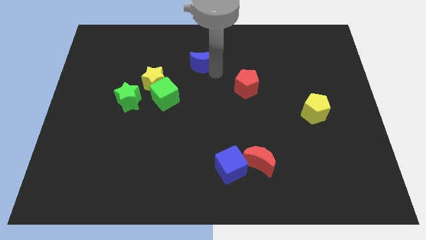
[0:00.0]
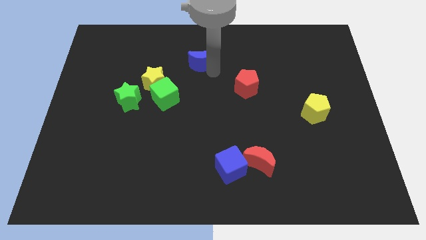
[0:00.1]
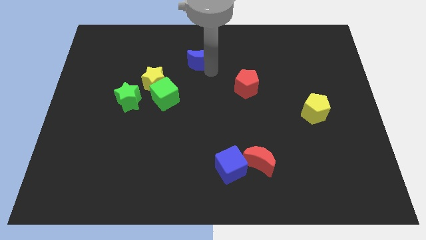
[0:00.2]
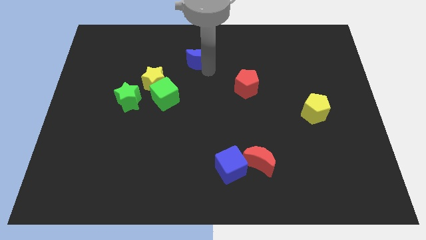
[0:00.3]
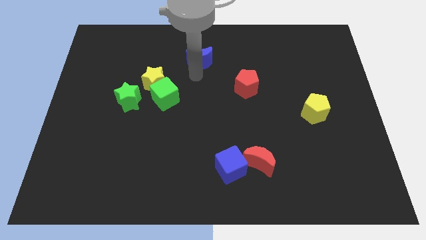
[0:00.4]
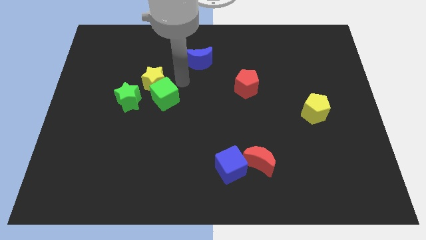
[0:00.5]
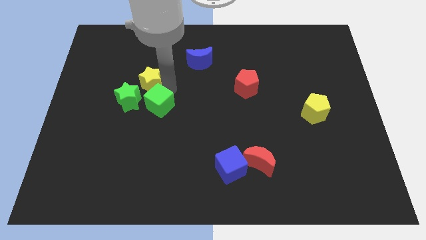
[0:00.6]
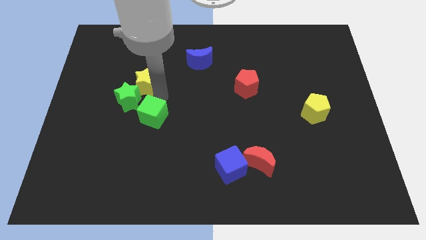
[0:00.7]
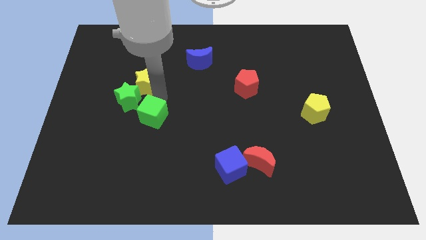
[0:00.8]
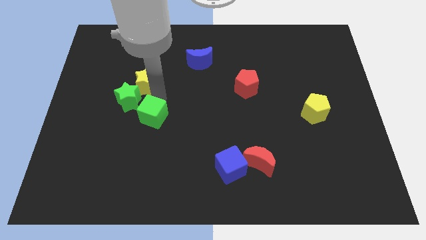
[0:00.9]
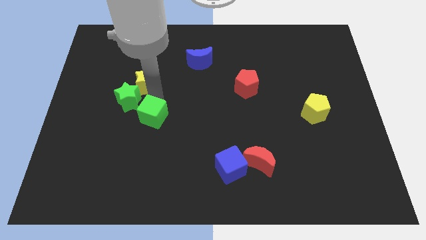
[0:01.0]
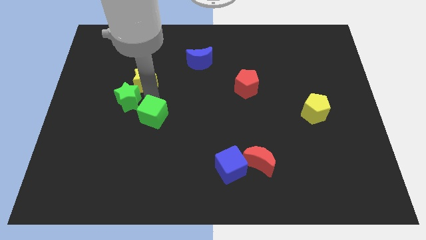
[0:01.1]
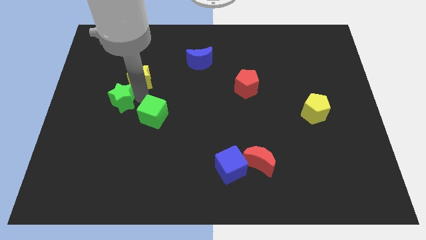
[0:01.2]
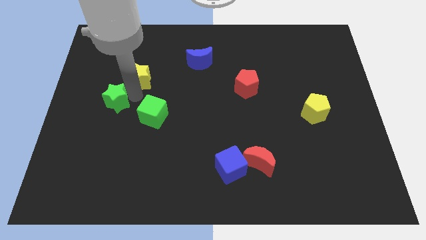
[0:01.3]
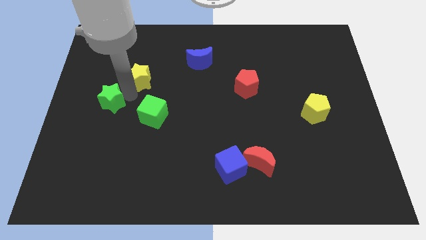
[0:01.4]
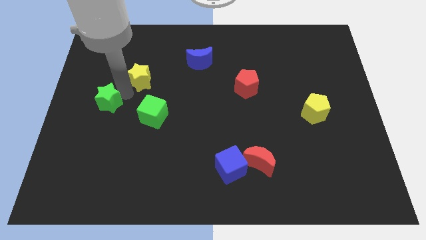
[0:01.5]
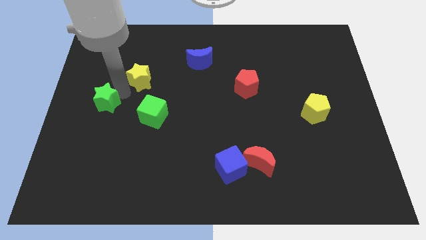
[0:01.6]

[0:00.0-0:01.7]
separate green star from yellow star

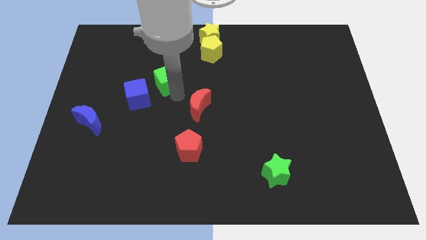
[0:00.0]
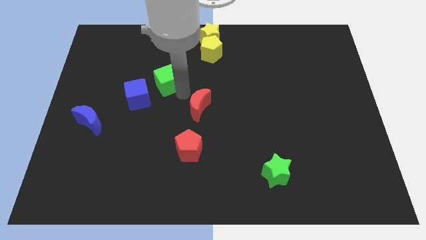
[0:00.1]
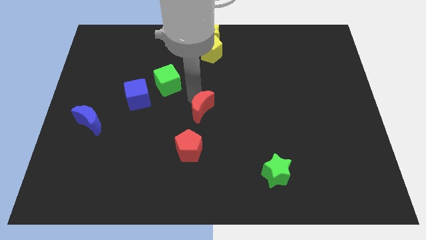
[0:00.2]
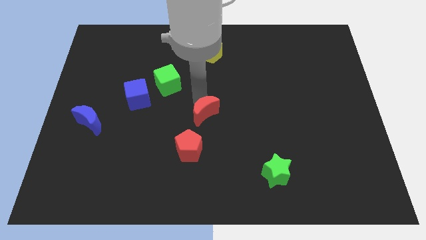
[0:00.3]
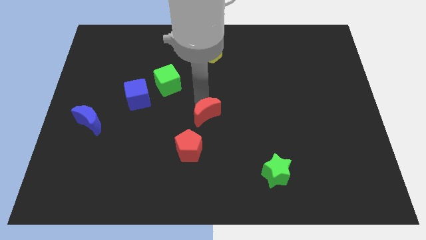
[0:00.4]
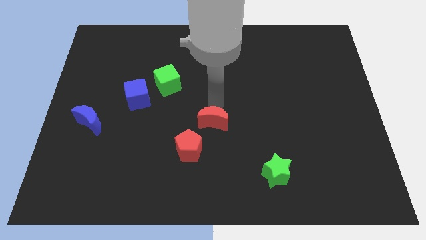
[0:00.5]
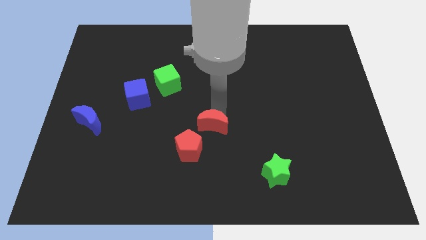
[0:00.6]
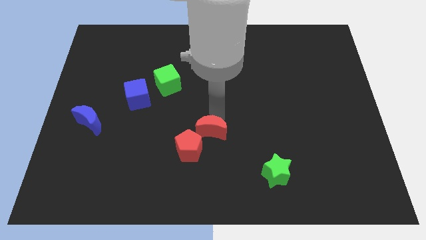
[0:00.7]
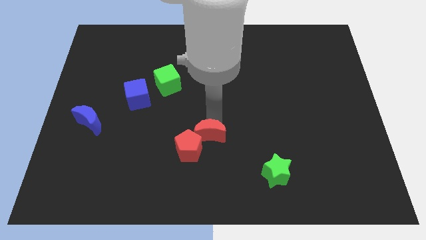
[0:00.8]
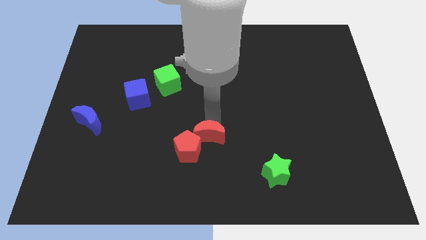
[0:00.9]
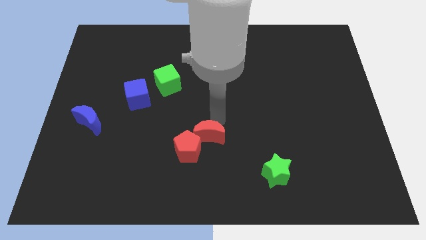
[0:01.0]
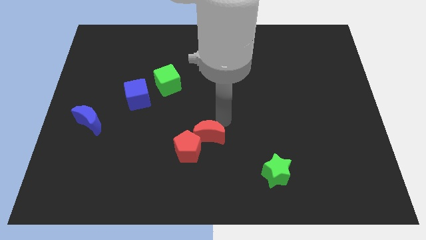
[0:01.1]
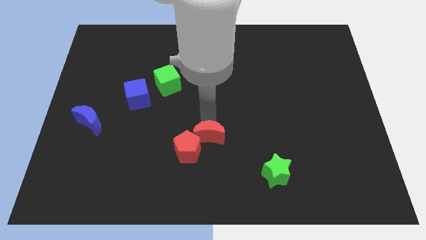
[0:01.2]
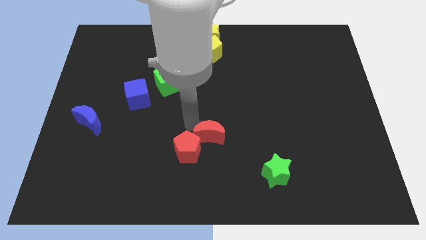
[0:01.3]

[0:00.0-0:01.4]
move the red crescent into the red pentagon

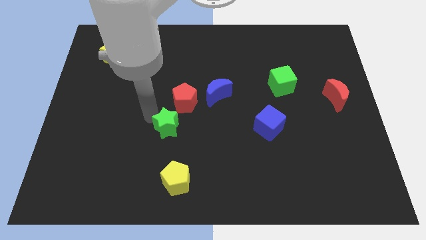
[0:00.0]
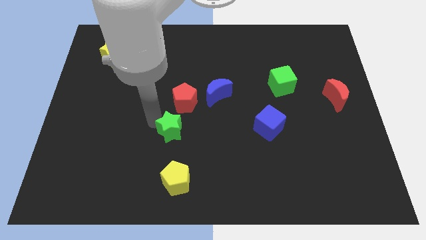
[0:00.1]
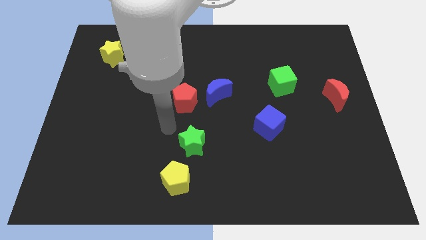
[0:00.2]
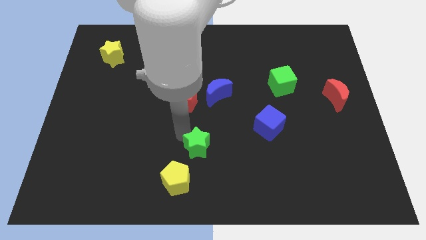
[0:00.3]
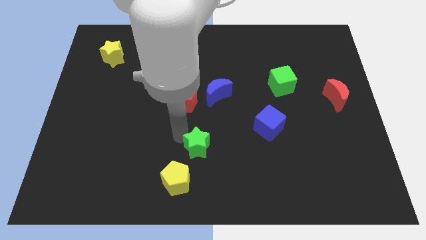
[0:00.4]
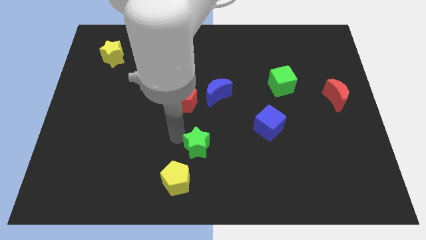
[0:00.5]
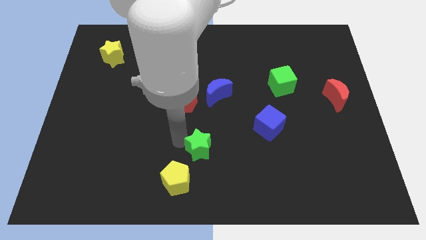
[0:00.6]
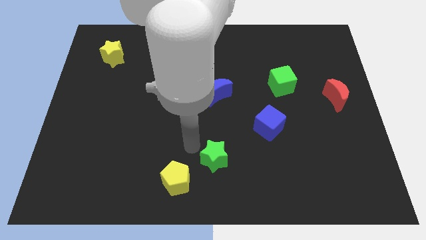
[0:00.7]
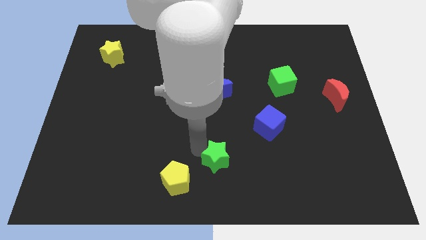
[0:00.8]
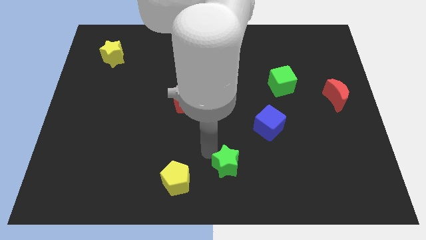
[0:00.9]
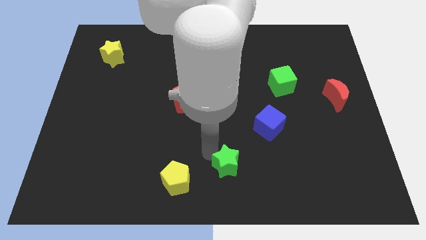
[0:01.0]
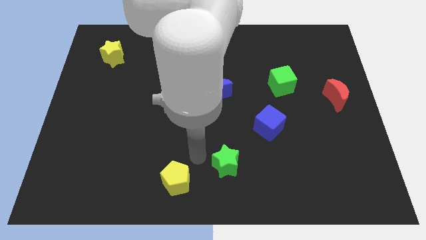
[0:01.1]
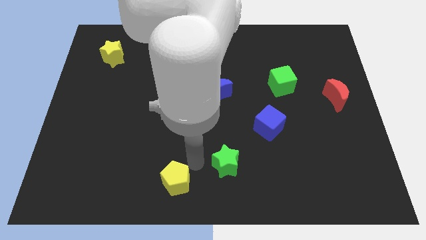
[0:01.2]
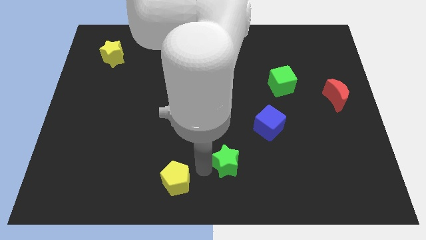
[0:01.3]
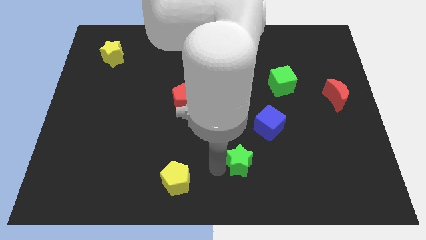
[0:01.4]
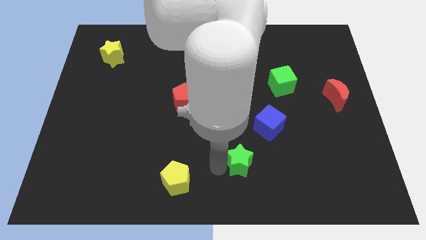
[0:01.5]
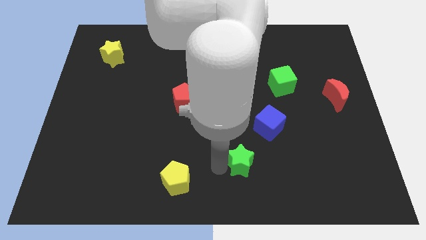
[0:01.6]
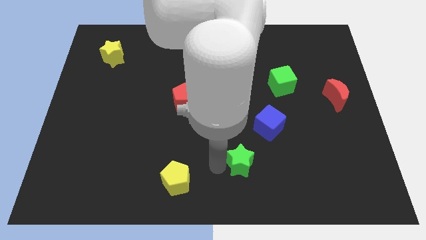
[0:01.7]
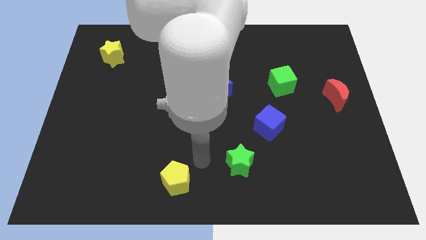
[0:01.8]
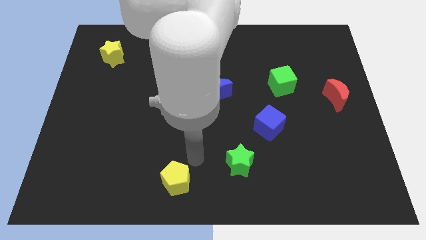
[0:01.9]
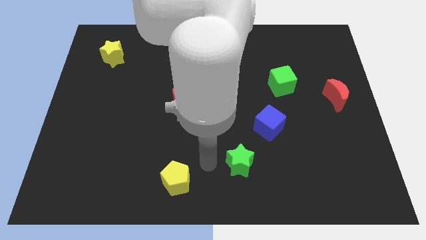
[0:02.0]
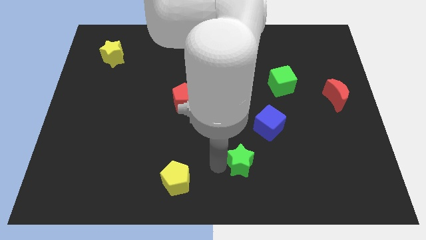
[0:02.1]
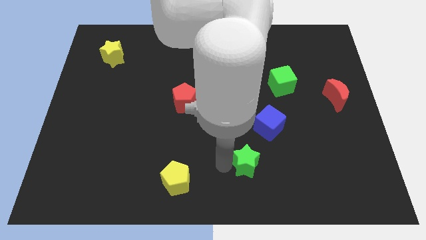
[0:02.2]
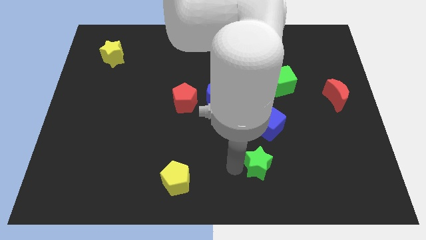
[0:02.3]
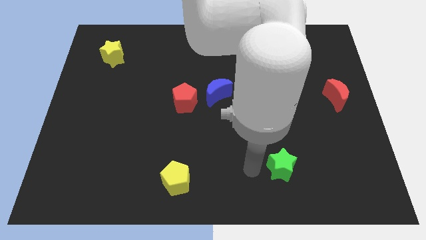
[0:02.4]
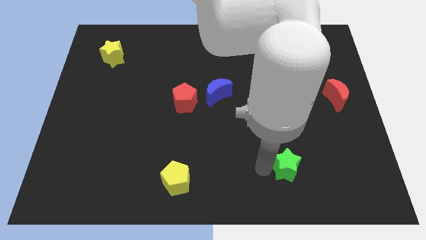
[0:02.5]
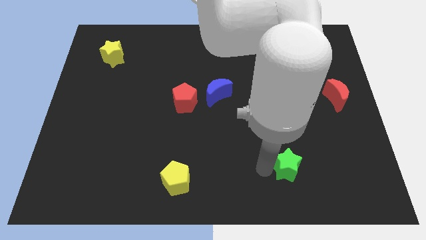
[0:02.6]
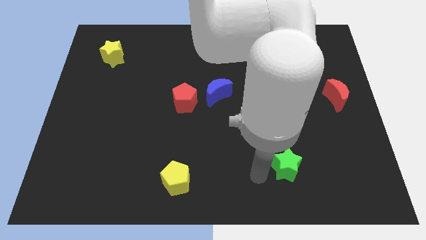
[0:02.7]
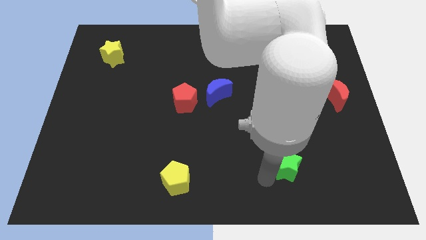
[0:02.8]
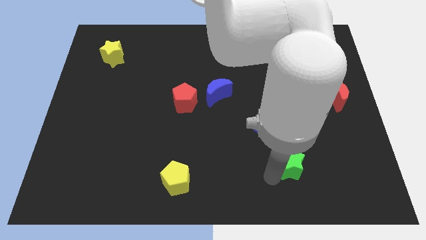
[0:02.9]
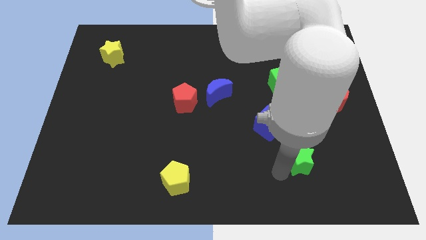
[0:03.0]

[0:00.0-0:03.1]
push green star to bottom right of blue cube

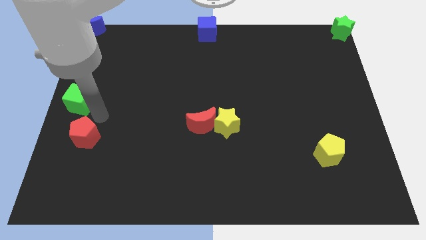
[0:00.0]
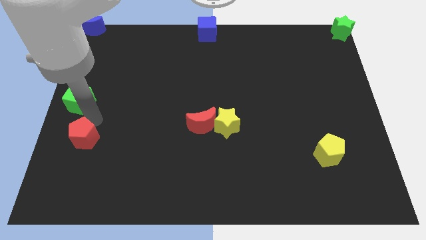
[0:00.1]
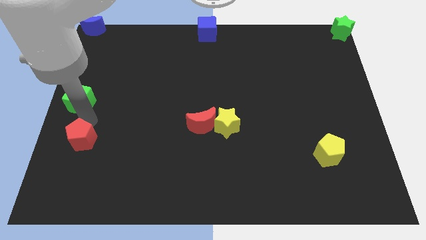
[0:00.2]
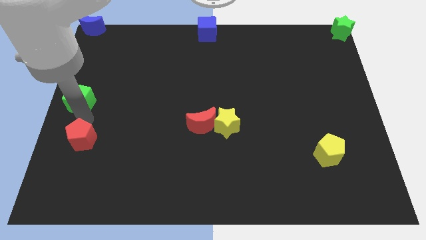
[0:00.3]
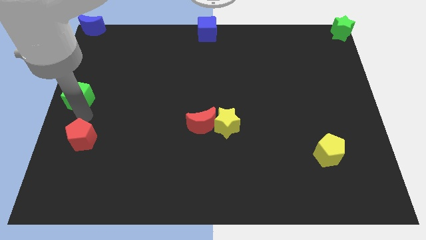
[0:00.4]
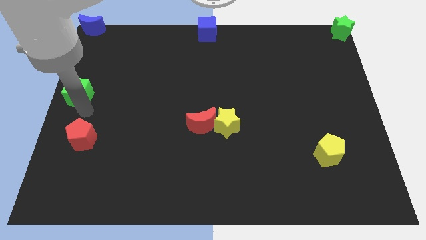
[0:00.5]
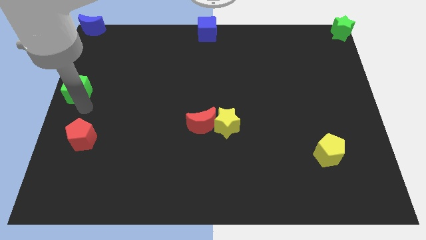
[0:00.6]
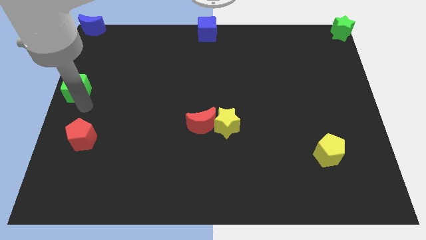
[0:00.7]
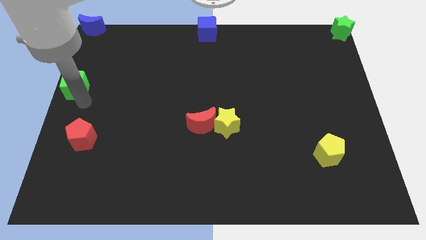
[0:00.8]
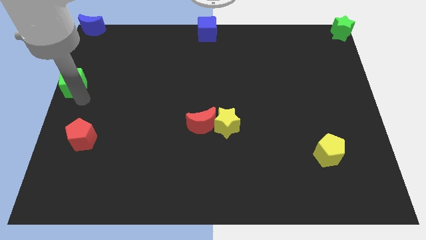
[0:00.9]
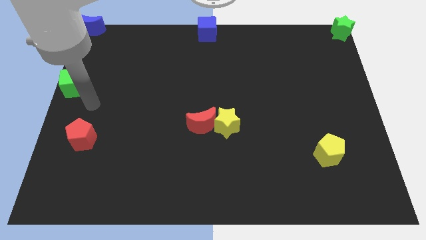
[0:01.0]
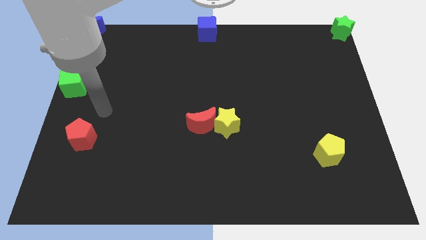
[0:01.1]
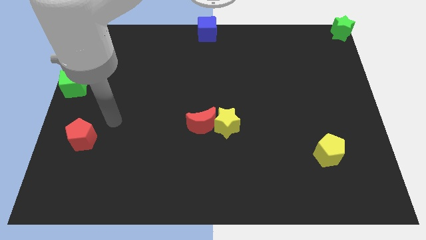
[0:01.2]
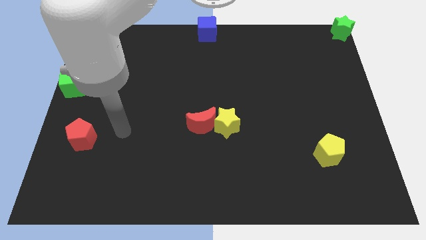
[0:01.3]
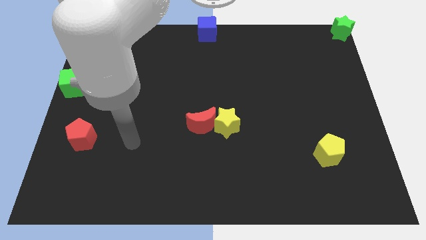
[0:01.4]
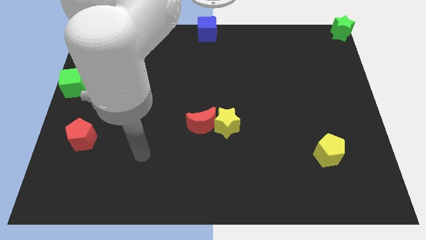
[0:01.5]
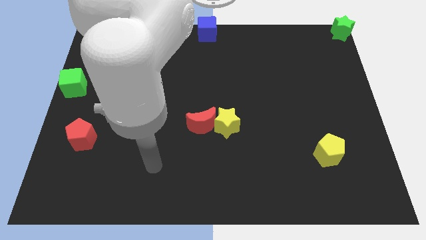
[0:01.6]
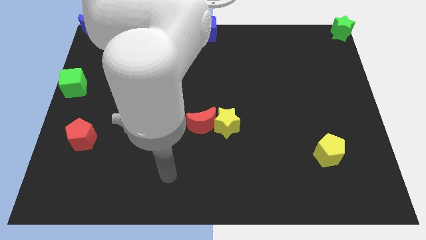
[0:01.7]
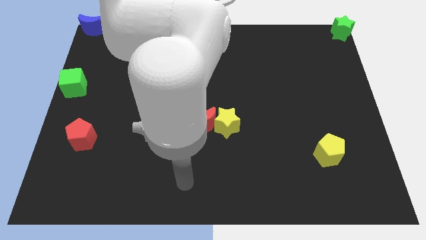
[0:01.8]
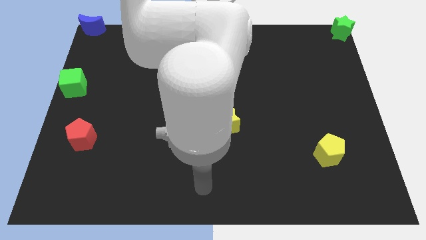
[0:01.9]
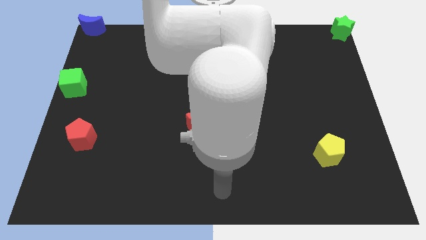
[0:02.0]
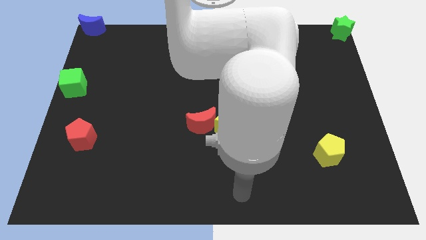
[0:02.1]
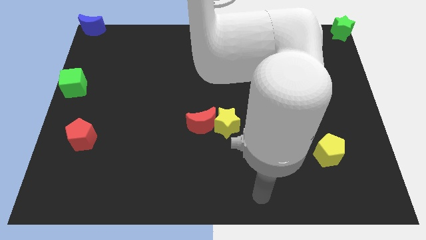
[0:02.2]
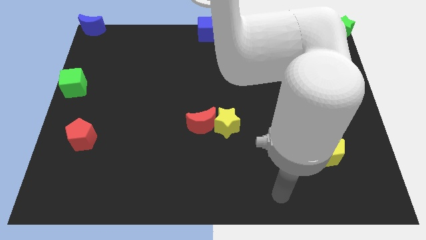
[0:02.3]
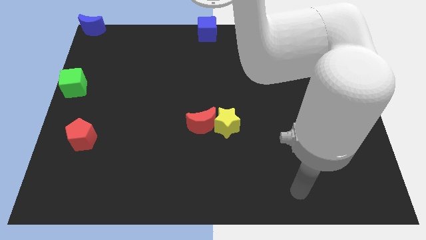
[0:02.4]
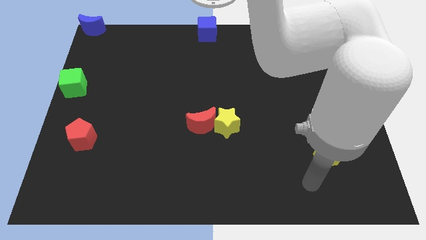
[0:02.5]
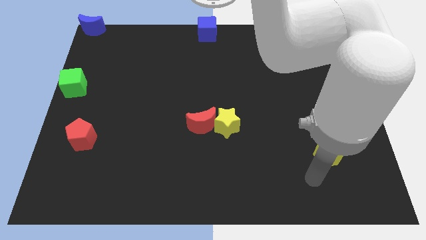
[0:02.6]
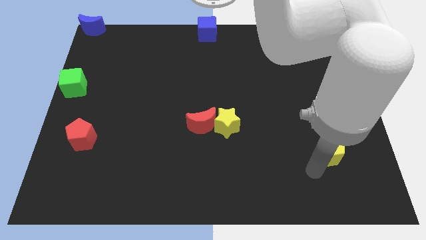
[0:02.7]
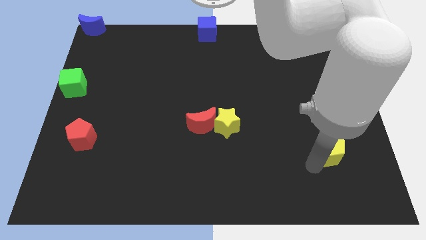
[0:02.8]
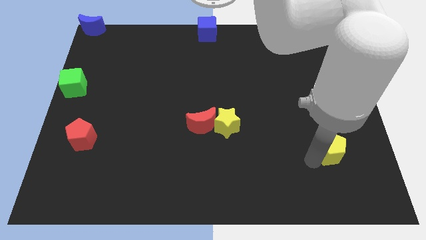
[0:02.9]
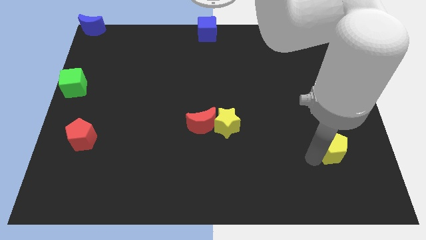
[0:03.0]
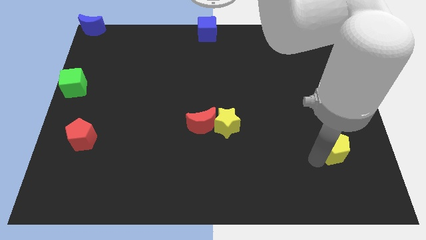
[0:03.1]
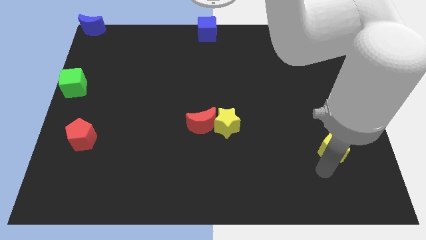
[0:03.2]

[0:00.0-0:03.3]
move your arm near the yellow pentagon
